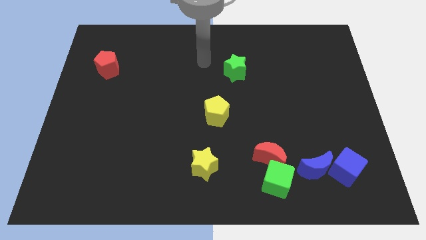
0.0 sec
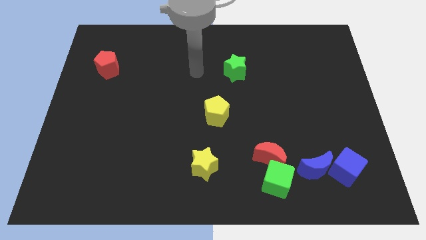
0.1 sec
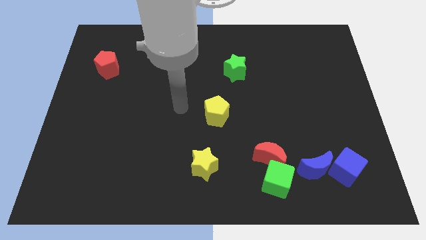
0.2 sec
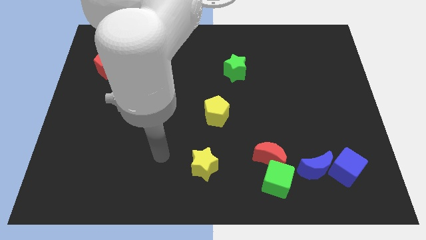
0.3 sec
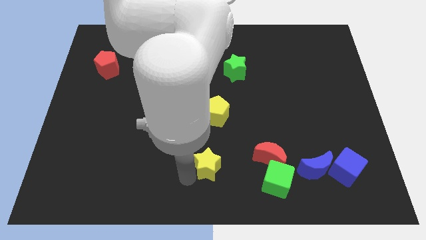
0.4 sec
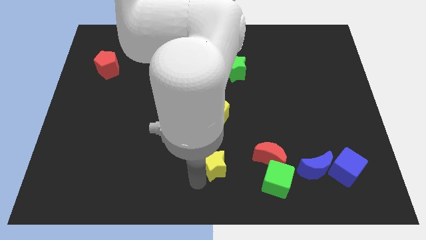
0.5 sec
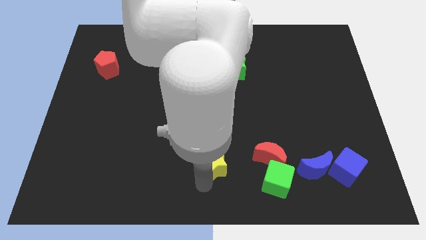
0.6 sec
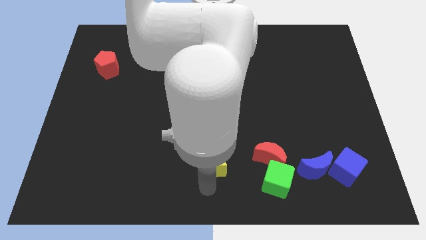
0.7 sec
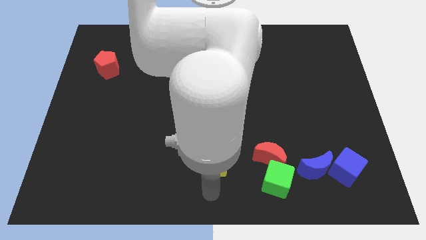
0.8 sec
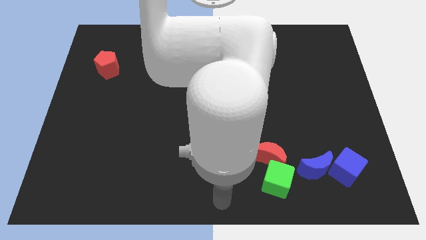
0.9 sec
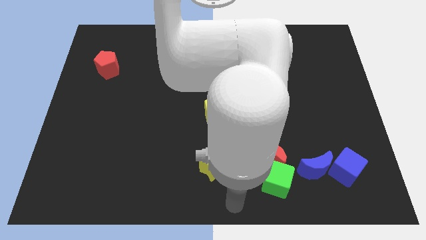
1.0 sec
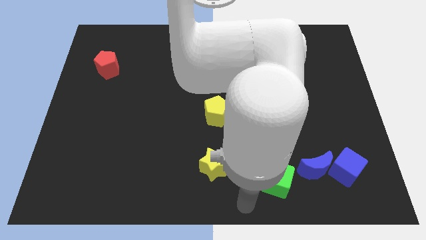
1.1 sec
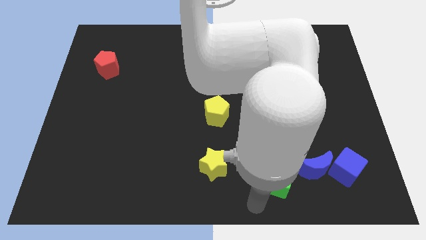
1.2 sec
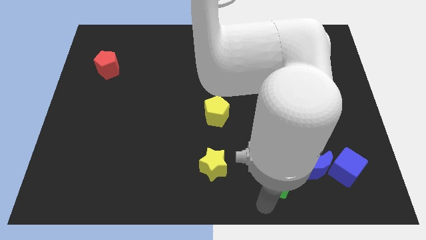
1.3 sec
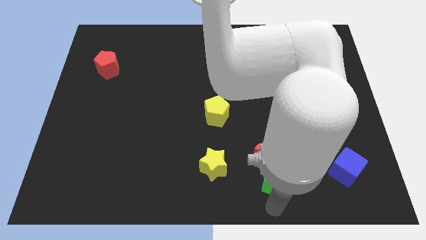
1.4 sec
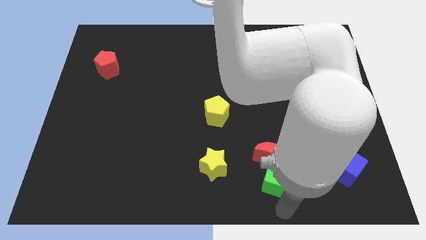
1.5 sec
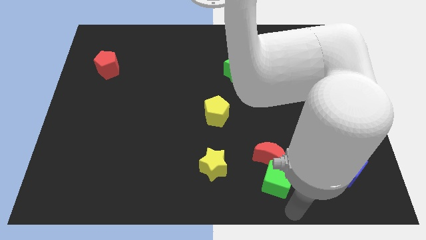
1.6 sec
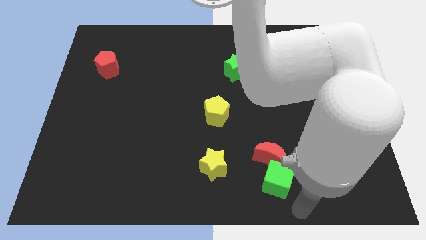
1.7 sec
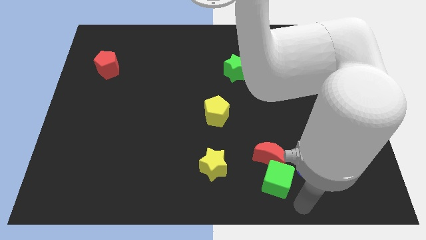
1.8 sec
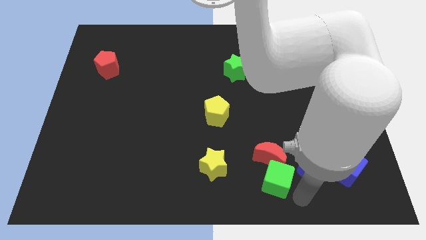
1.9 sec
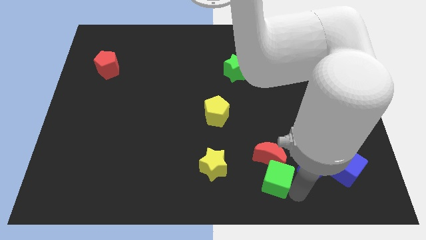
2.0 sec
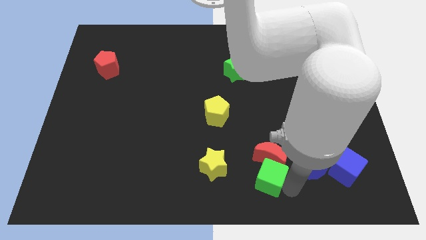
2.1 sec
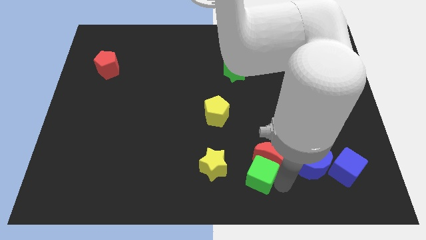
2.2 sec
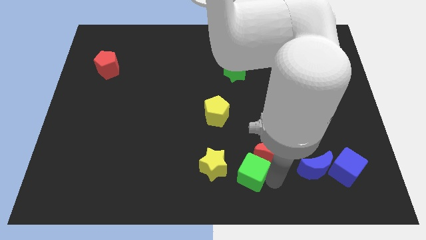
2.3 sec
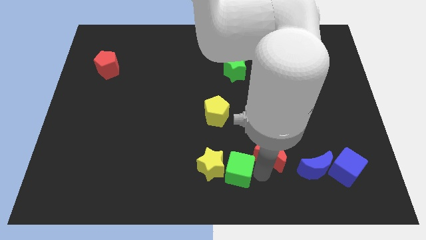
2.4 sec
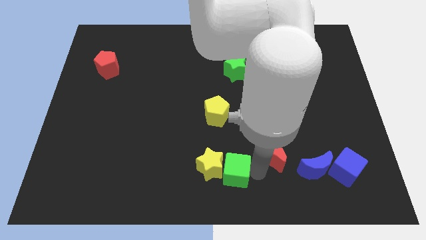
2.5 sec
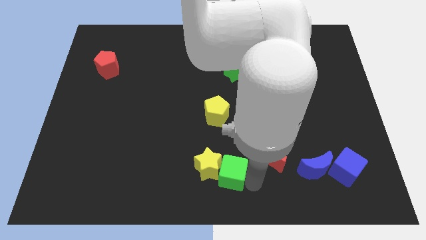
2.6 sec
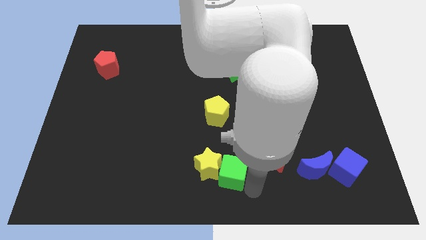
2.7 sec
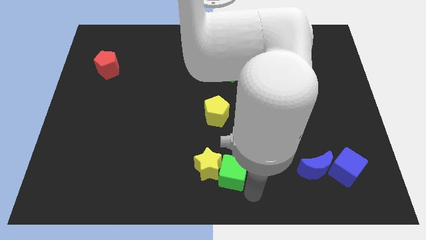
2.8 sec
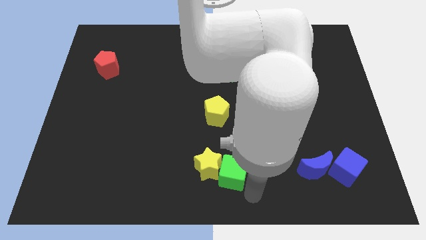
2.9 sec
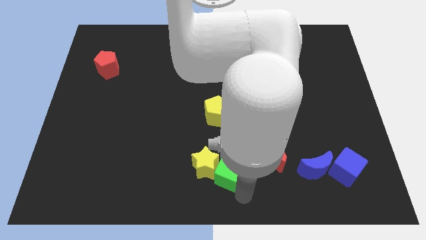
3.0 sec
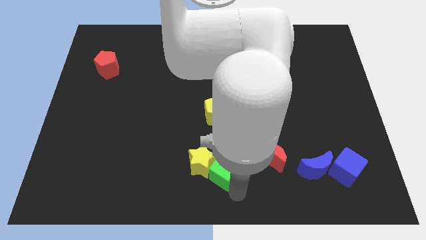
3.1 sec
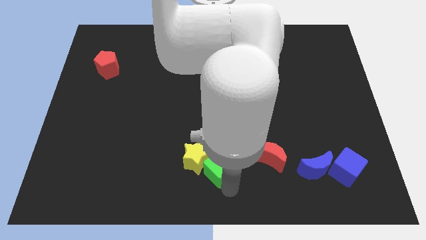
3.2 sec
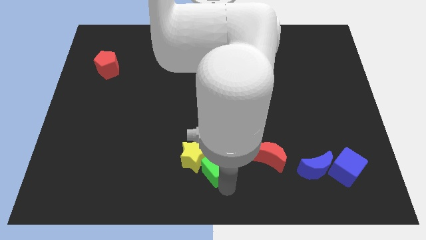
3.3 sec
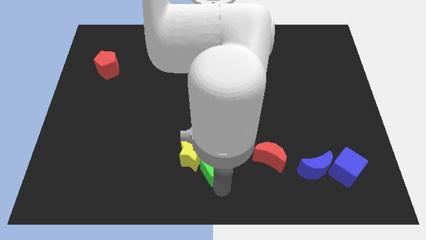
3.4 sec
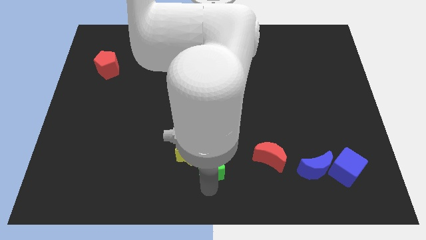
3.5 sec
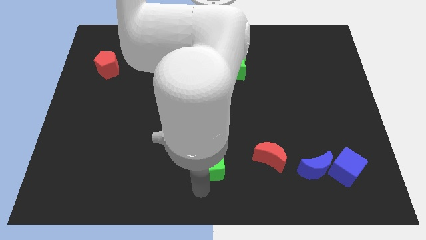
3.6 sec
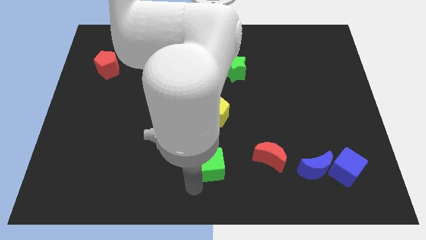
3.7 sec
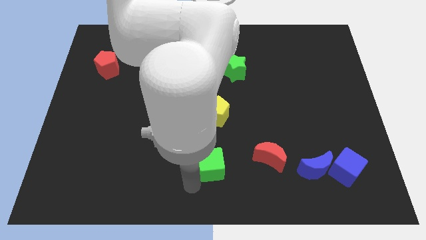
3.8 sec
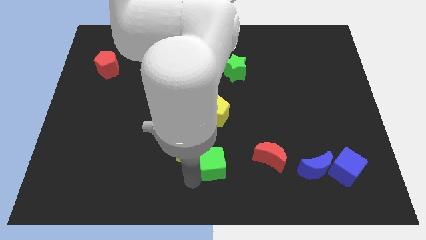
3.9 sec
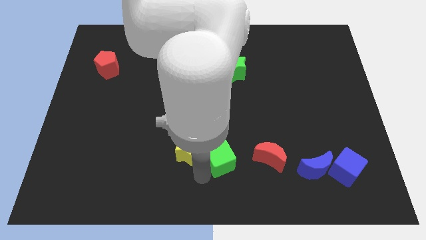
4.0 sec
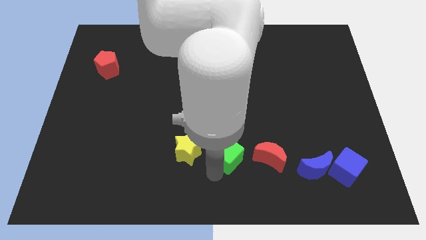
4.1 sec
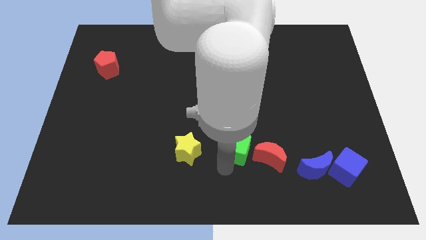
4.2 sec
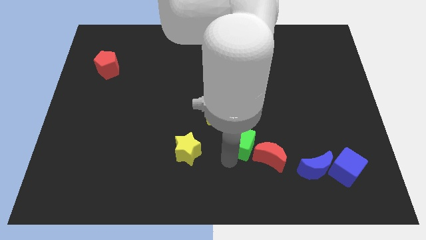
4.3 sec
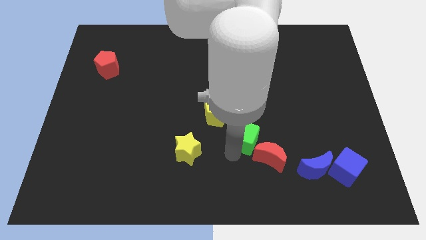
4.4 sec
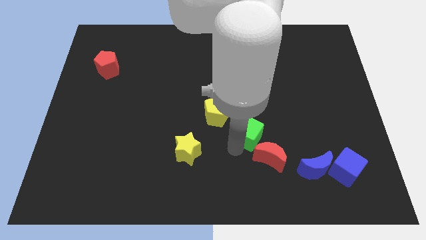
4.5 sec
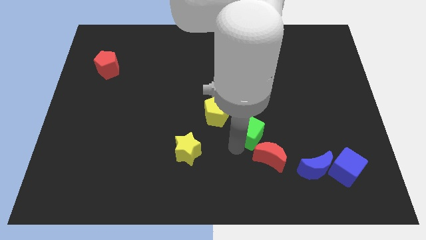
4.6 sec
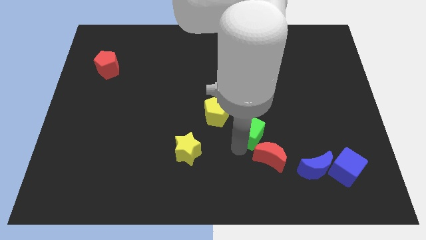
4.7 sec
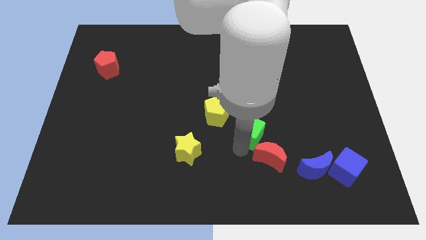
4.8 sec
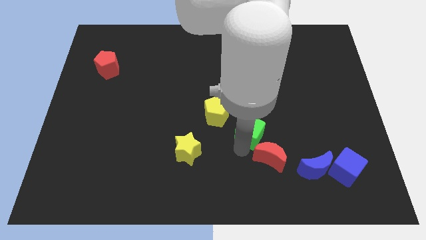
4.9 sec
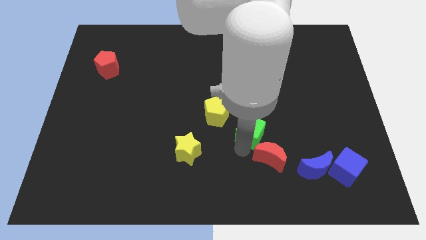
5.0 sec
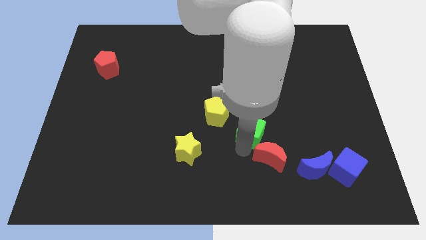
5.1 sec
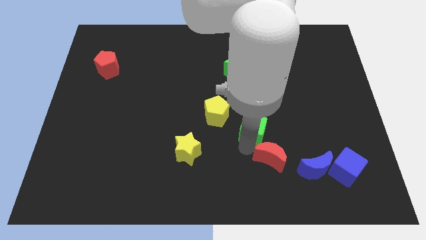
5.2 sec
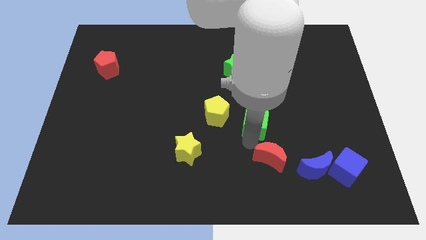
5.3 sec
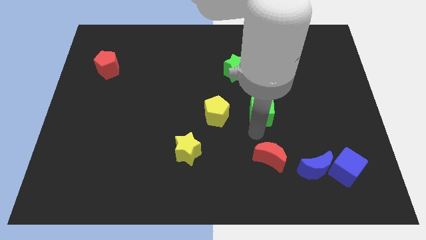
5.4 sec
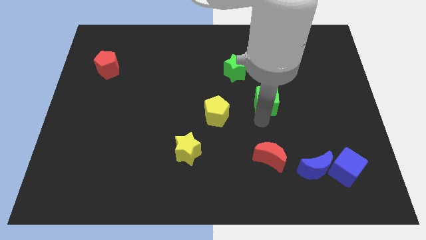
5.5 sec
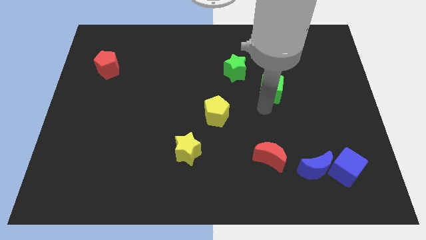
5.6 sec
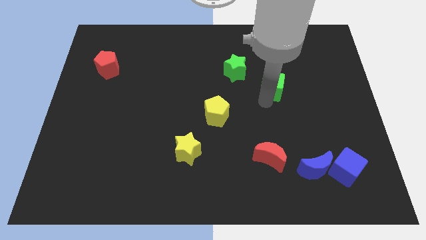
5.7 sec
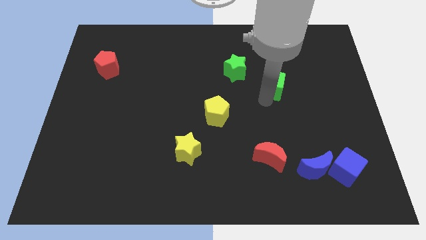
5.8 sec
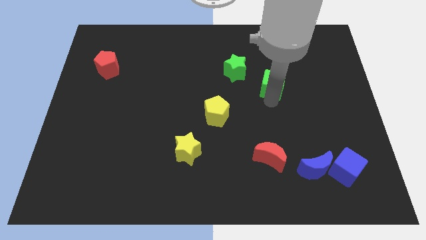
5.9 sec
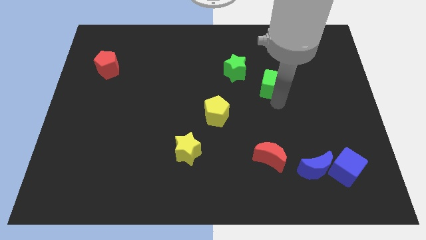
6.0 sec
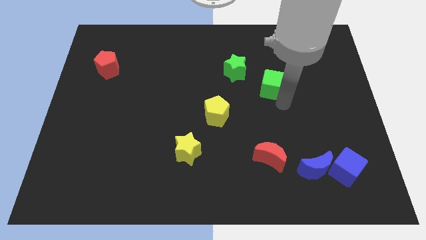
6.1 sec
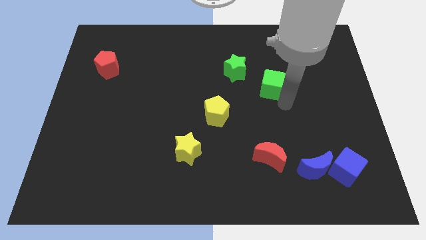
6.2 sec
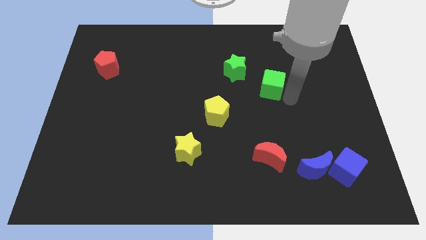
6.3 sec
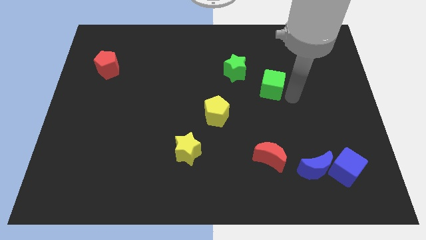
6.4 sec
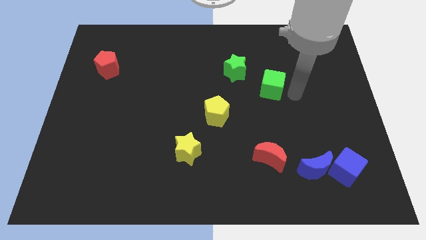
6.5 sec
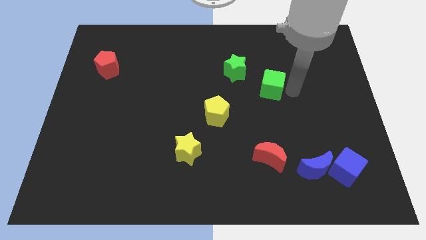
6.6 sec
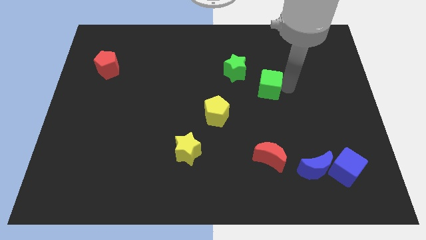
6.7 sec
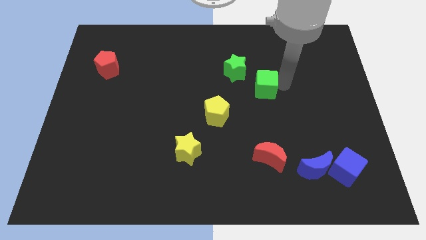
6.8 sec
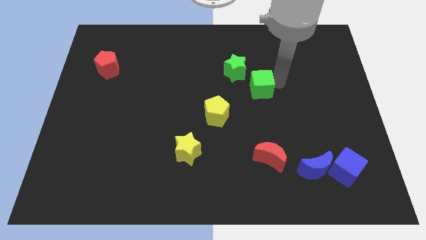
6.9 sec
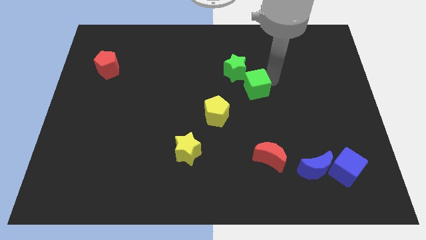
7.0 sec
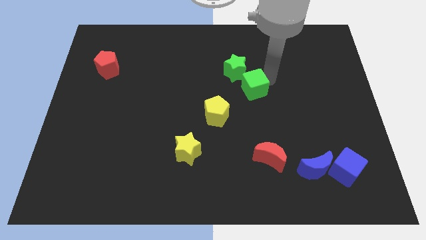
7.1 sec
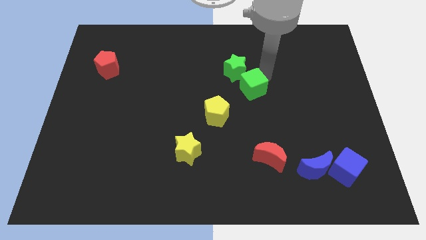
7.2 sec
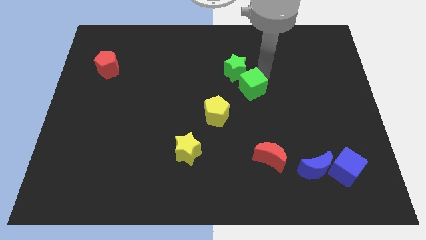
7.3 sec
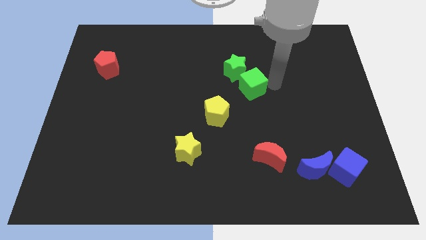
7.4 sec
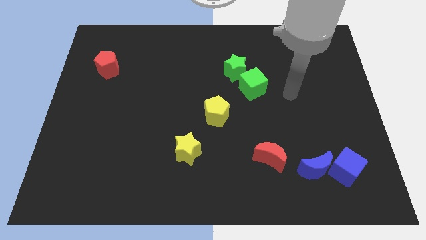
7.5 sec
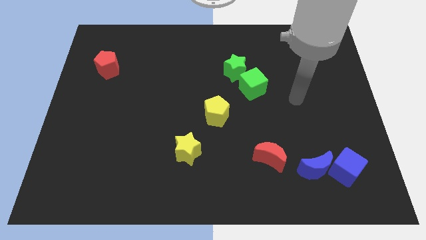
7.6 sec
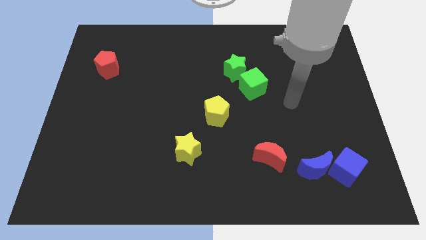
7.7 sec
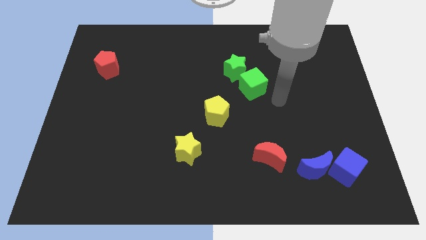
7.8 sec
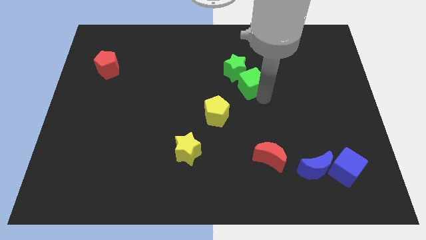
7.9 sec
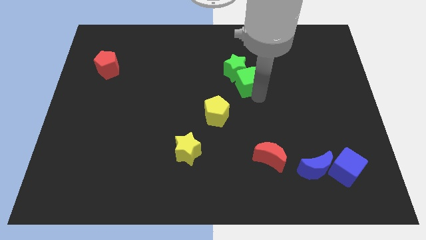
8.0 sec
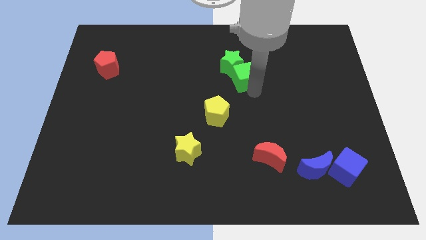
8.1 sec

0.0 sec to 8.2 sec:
slide the green cube to the green star

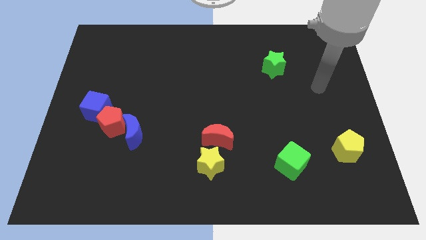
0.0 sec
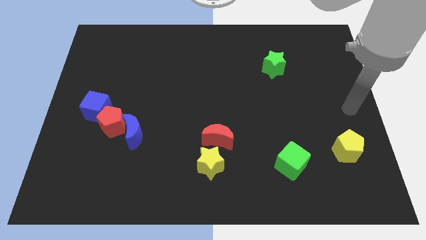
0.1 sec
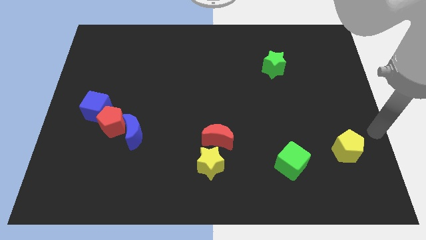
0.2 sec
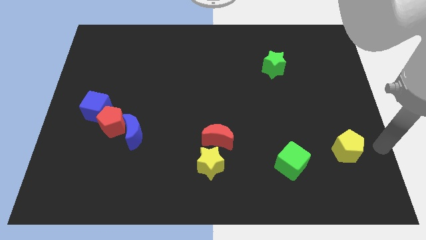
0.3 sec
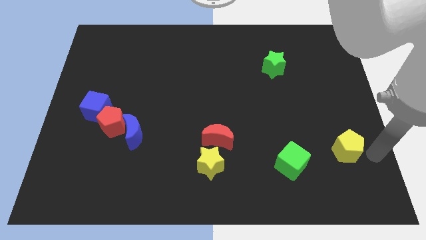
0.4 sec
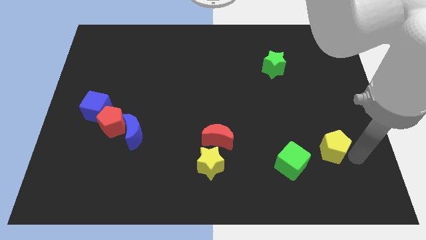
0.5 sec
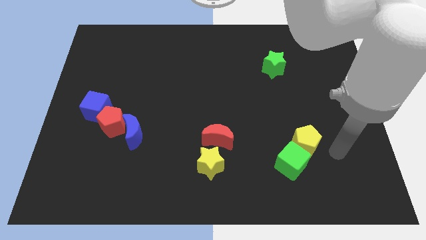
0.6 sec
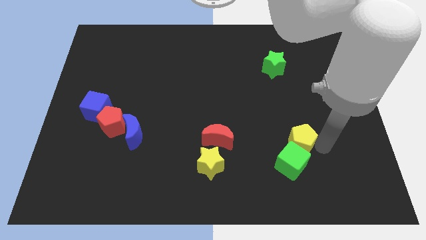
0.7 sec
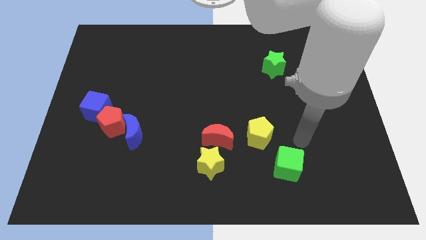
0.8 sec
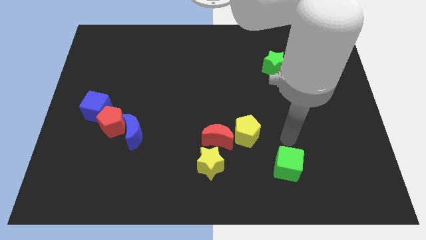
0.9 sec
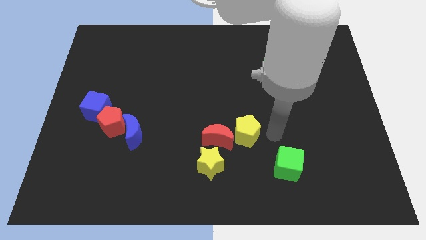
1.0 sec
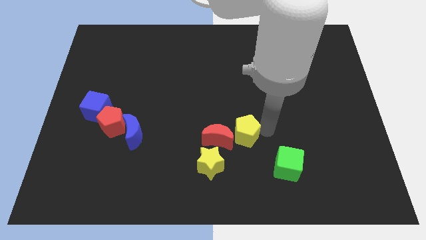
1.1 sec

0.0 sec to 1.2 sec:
slide the yellow pentagon to the red moon
